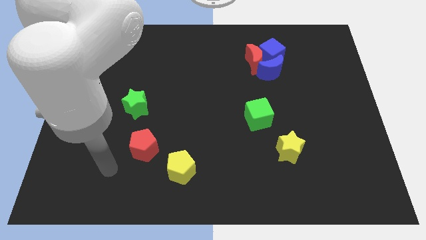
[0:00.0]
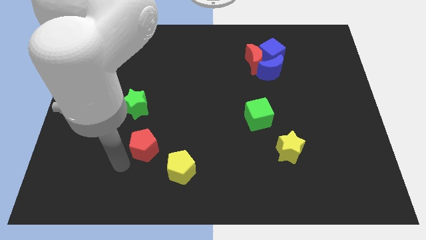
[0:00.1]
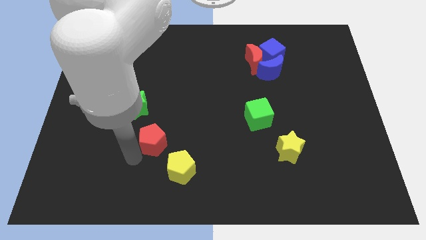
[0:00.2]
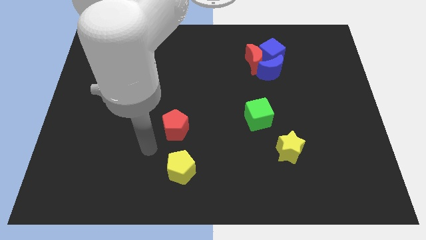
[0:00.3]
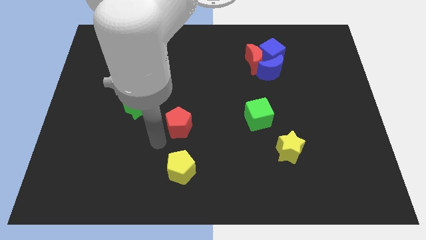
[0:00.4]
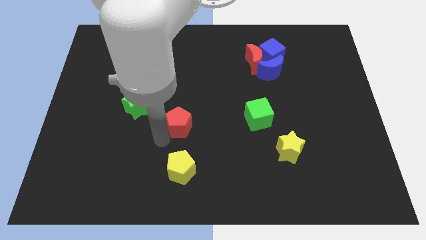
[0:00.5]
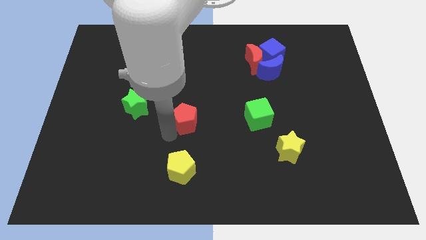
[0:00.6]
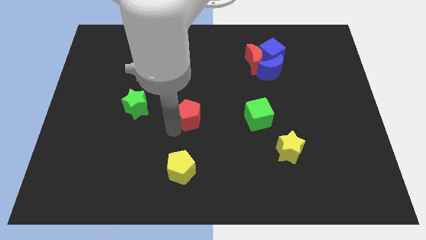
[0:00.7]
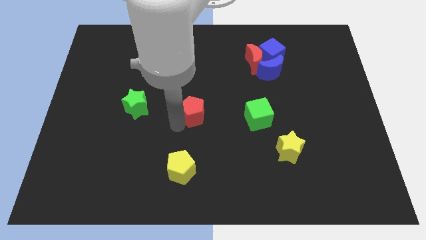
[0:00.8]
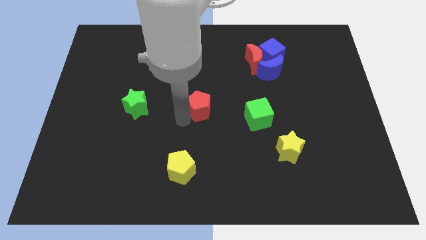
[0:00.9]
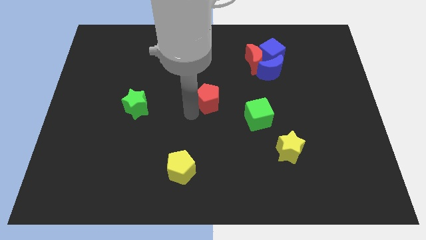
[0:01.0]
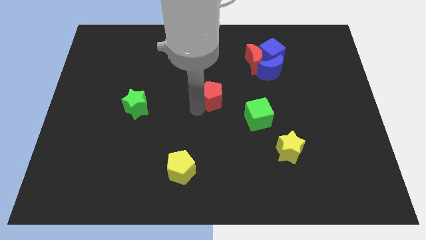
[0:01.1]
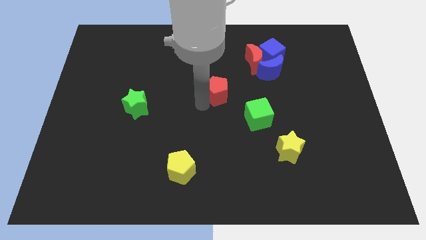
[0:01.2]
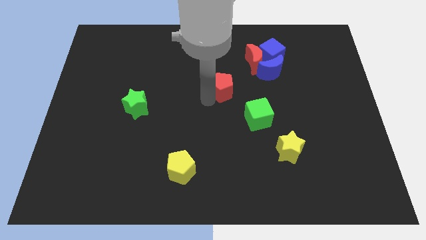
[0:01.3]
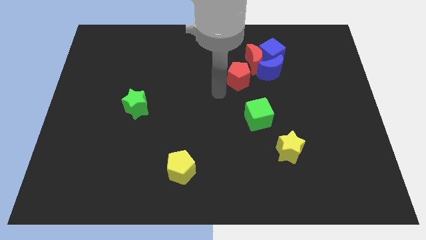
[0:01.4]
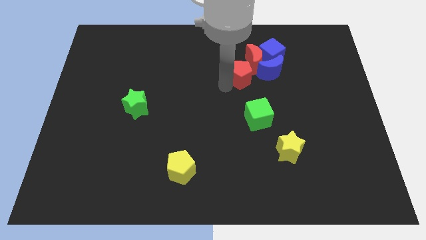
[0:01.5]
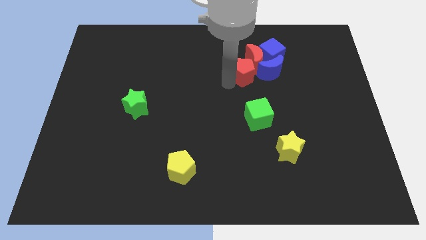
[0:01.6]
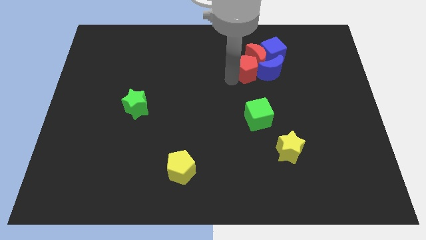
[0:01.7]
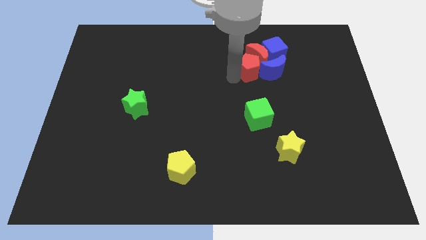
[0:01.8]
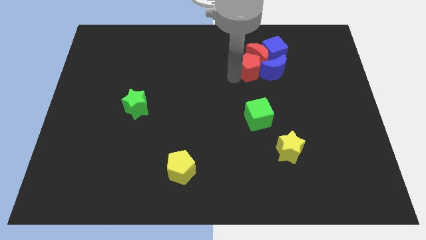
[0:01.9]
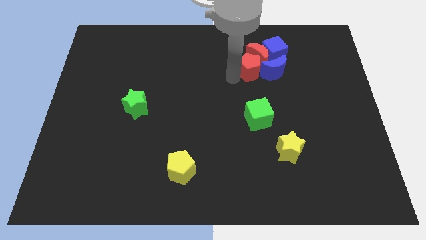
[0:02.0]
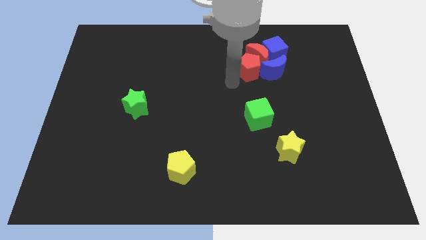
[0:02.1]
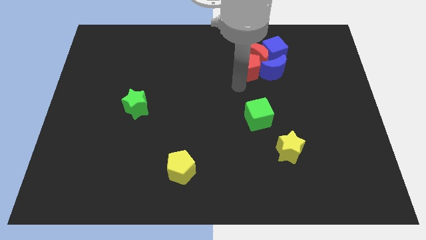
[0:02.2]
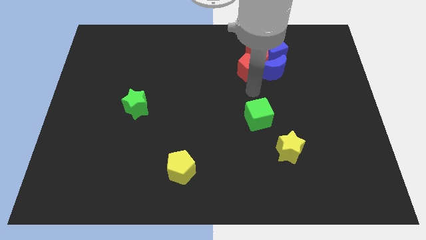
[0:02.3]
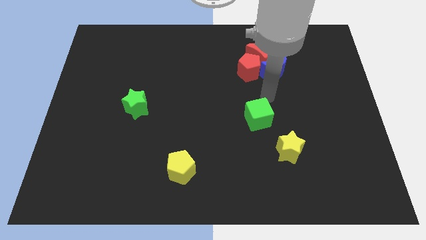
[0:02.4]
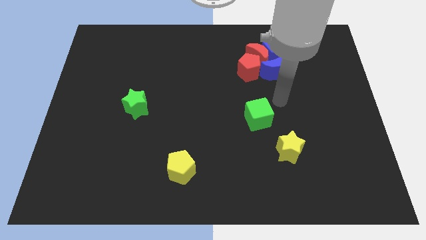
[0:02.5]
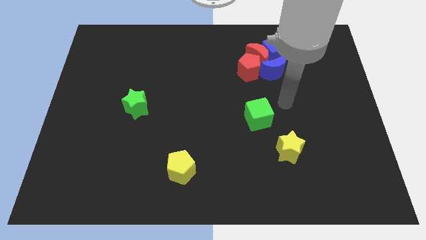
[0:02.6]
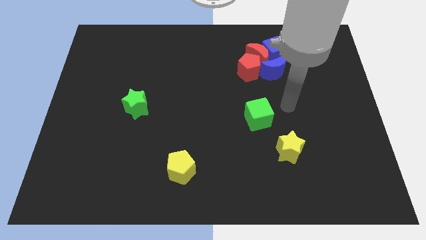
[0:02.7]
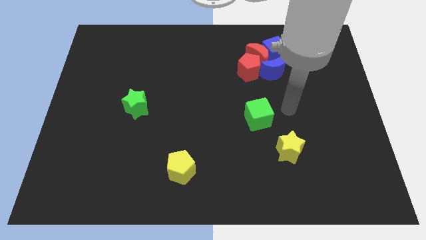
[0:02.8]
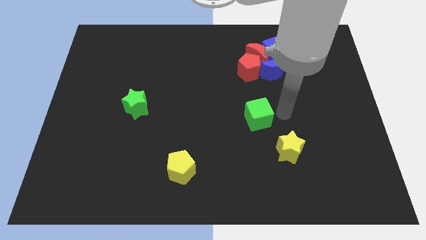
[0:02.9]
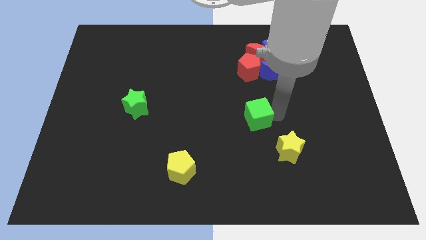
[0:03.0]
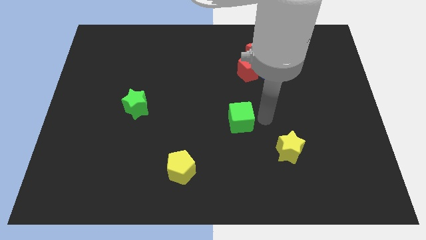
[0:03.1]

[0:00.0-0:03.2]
move the red pentagon into the red moon

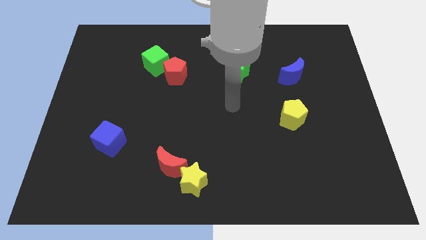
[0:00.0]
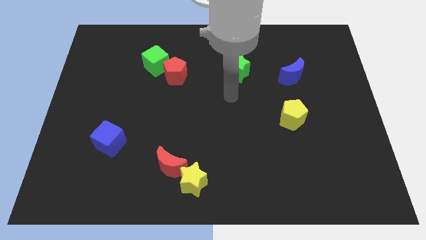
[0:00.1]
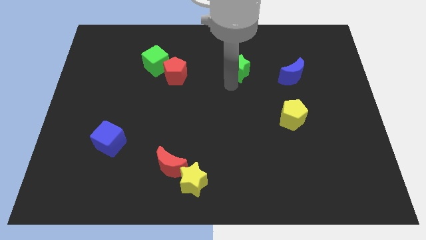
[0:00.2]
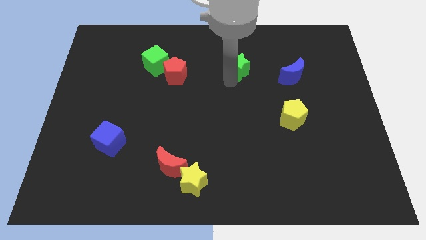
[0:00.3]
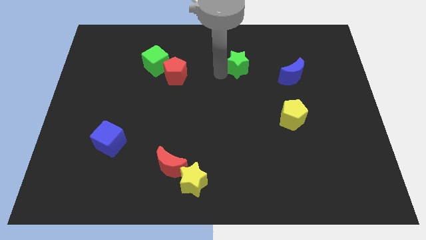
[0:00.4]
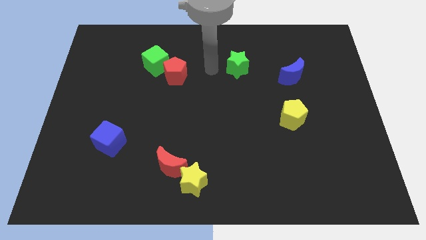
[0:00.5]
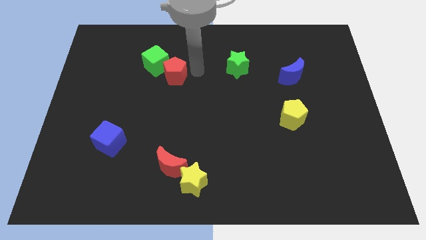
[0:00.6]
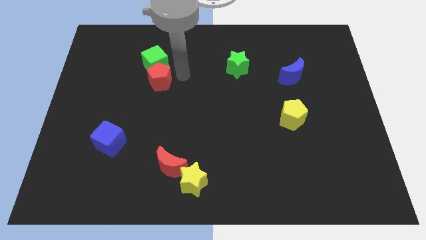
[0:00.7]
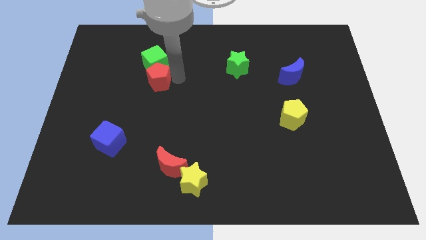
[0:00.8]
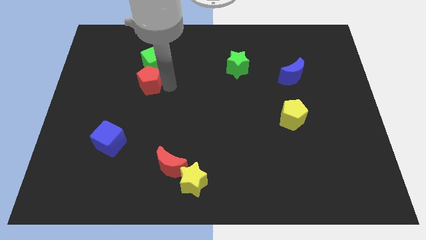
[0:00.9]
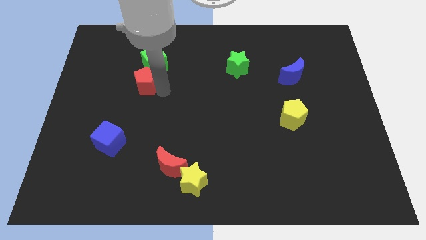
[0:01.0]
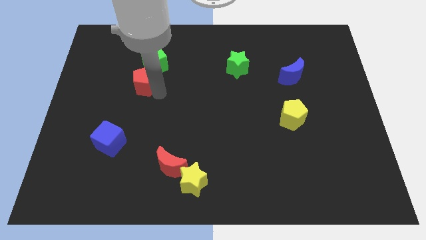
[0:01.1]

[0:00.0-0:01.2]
move the red pentagon below the green cube

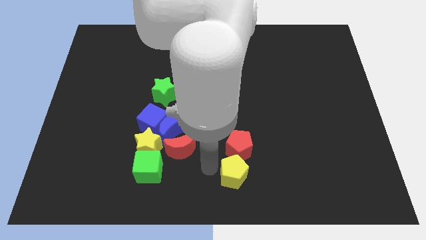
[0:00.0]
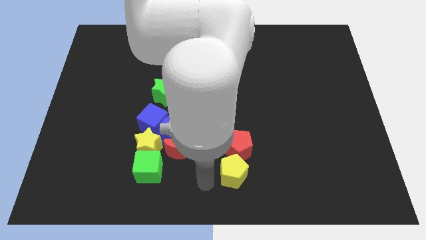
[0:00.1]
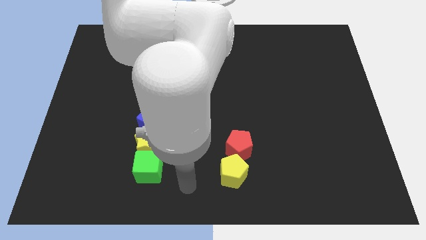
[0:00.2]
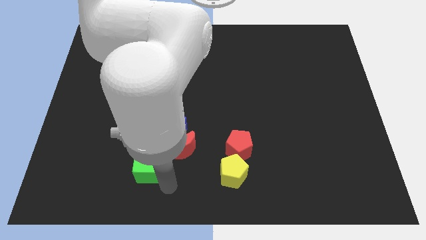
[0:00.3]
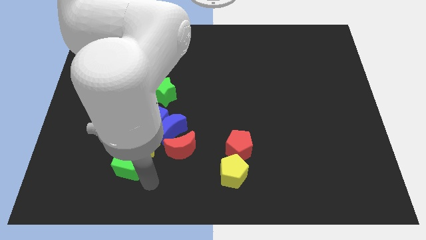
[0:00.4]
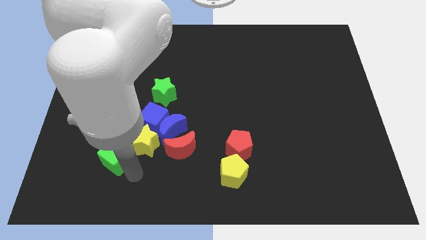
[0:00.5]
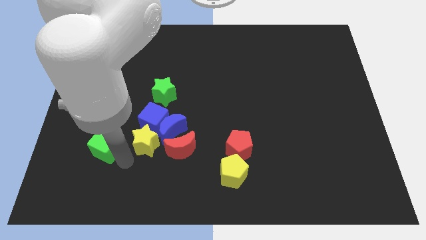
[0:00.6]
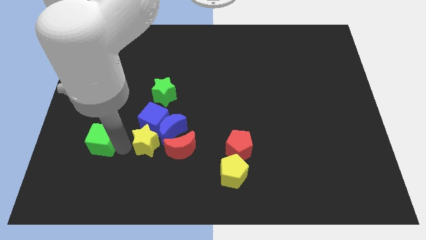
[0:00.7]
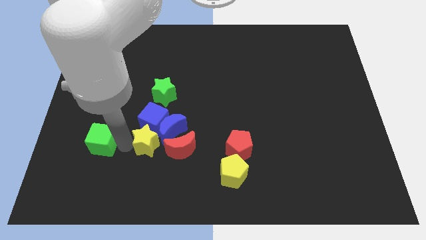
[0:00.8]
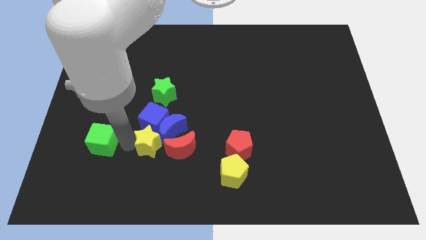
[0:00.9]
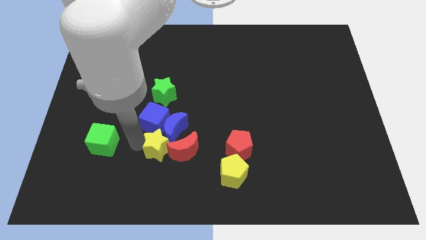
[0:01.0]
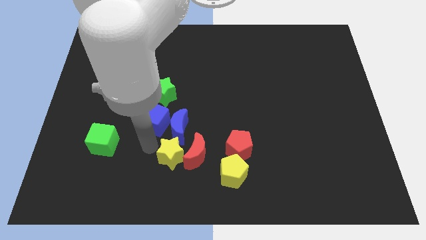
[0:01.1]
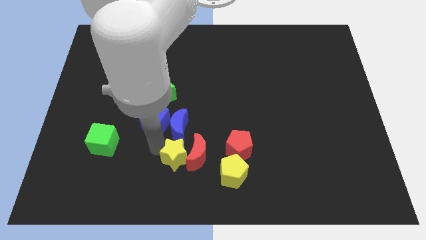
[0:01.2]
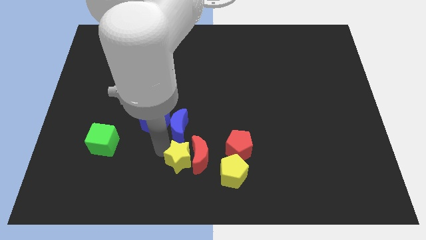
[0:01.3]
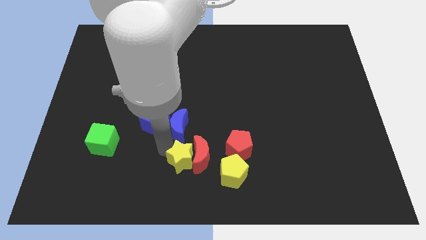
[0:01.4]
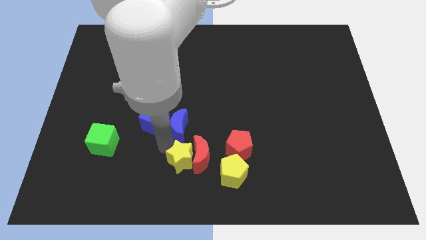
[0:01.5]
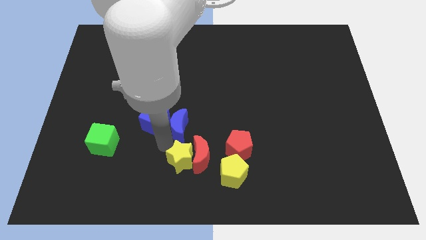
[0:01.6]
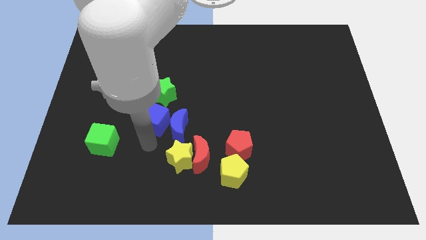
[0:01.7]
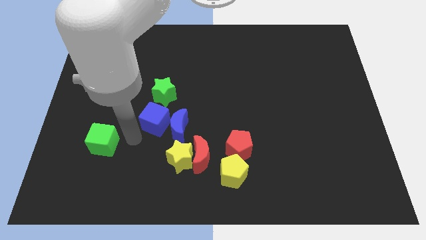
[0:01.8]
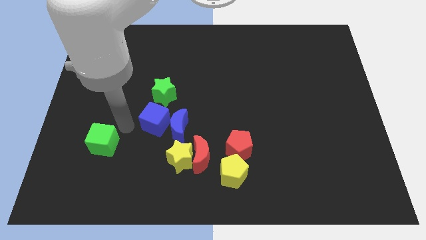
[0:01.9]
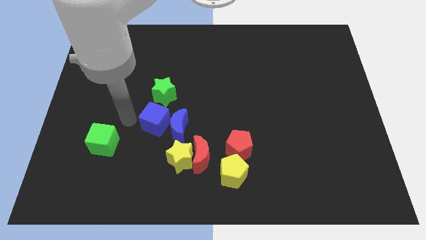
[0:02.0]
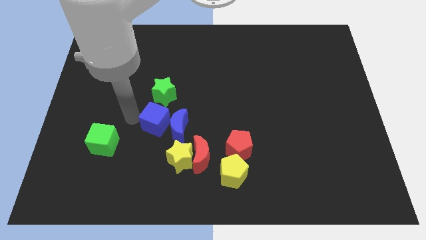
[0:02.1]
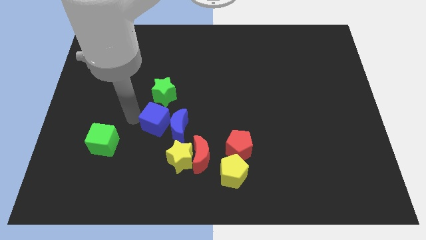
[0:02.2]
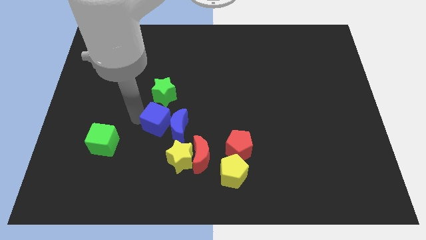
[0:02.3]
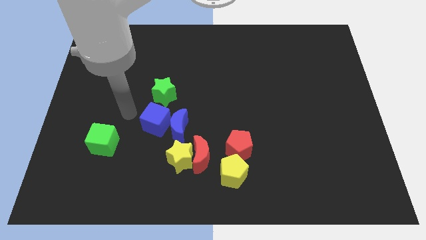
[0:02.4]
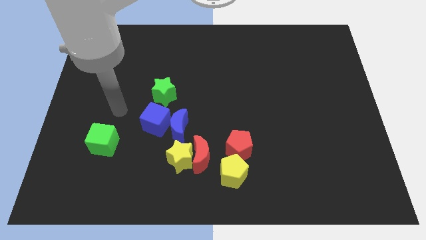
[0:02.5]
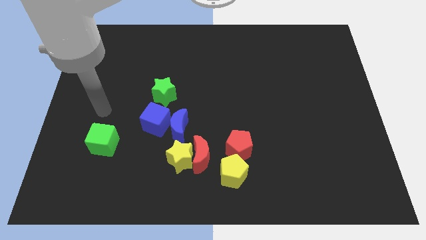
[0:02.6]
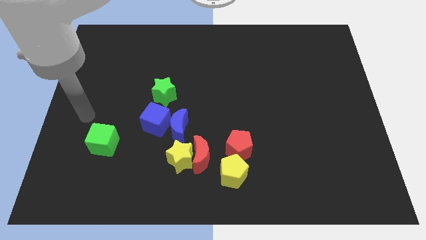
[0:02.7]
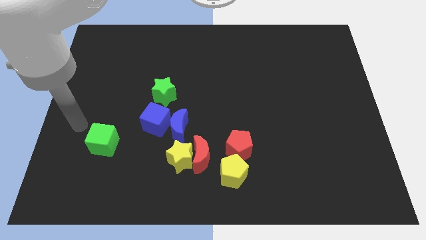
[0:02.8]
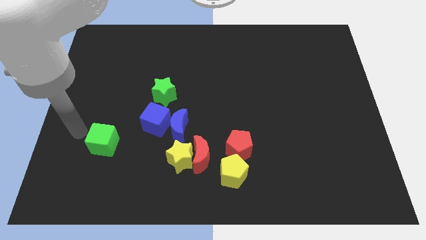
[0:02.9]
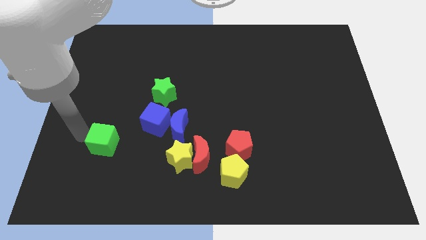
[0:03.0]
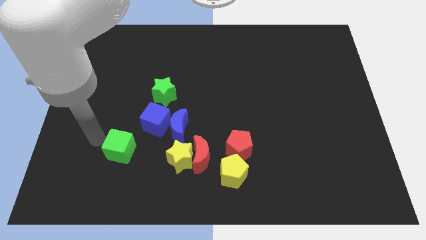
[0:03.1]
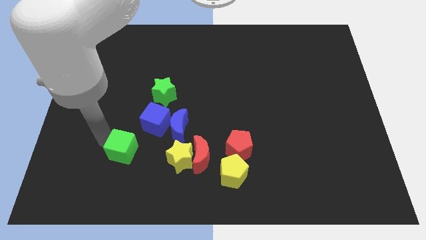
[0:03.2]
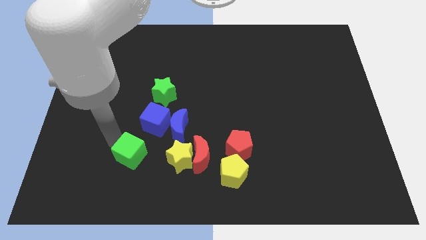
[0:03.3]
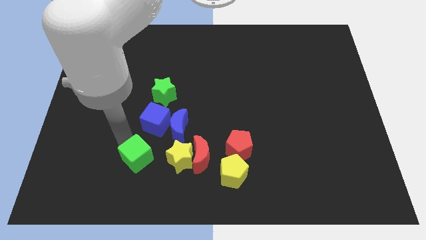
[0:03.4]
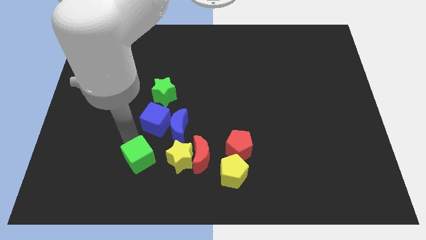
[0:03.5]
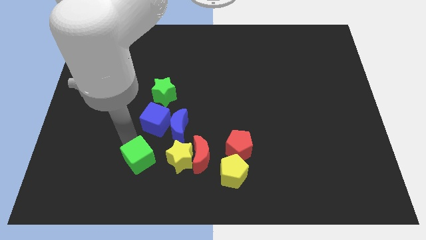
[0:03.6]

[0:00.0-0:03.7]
push the yellow star red moon and green cube towards the group of pentagons

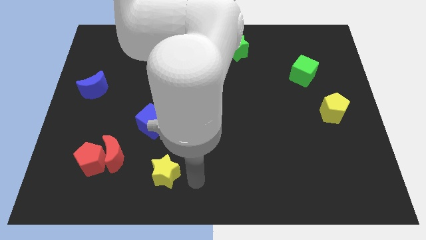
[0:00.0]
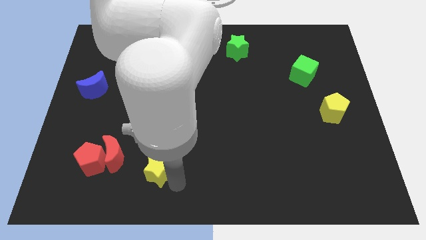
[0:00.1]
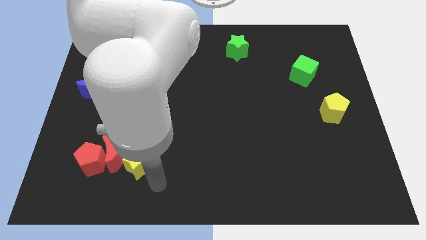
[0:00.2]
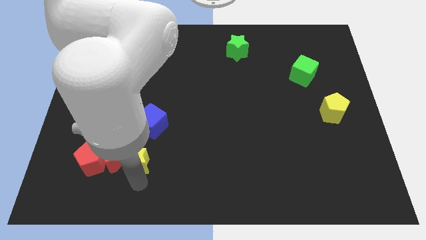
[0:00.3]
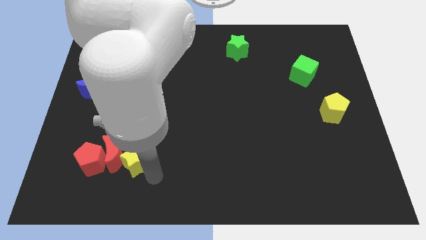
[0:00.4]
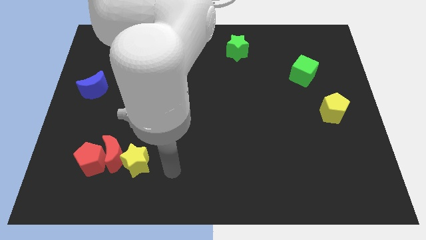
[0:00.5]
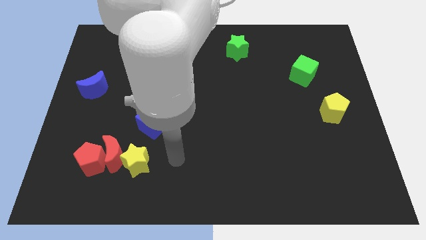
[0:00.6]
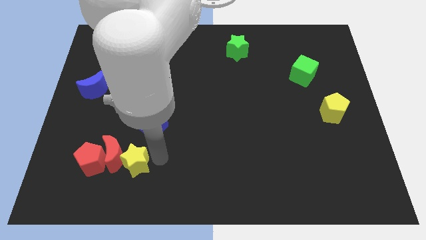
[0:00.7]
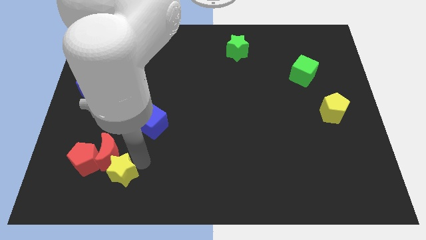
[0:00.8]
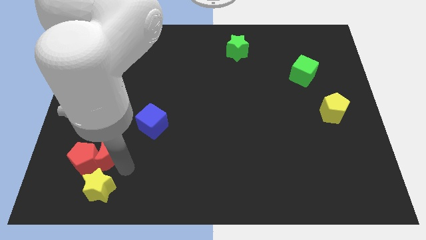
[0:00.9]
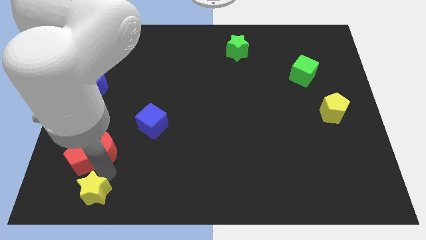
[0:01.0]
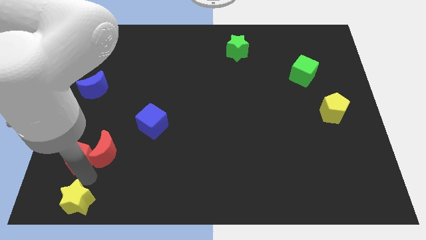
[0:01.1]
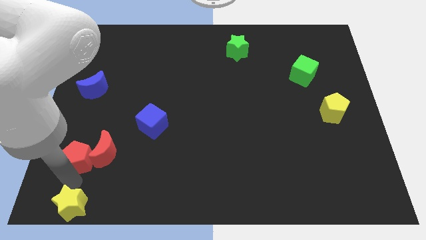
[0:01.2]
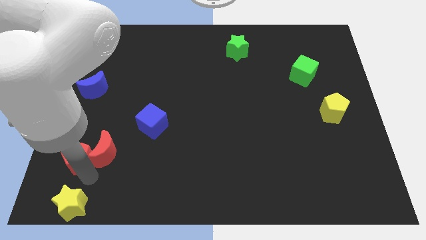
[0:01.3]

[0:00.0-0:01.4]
slide yellow star below the red pentagon
